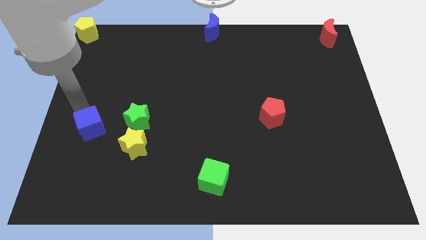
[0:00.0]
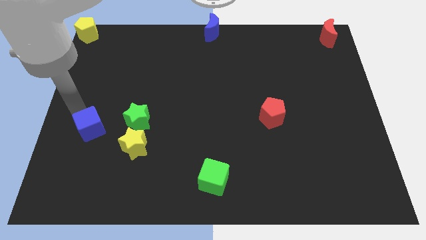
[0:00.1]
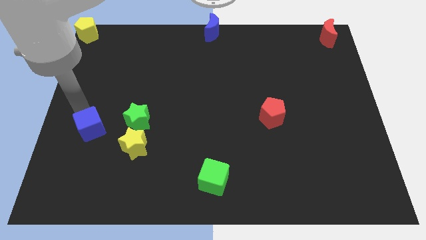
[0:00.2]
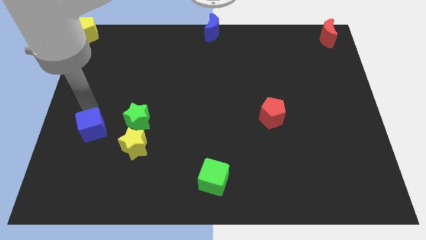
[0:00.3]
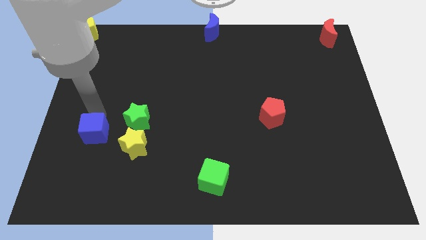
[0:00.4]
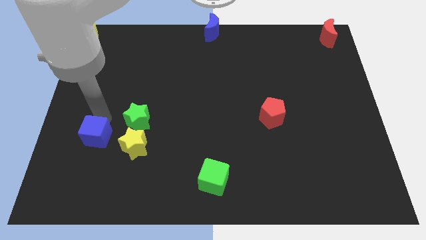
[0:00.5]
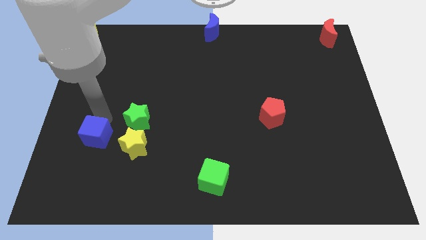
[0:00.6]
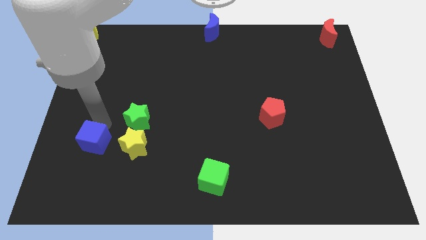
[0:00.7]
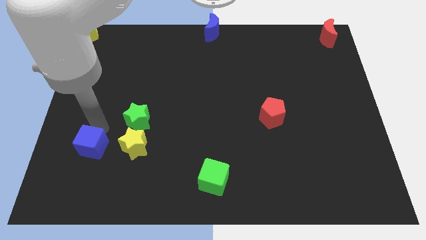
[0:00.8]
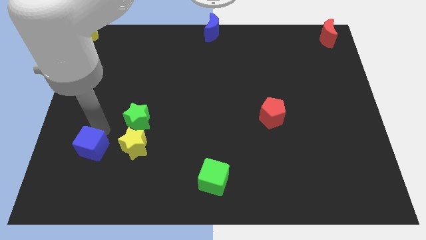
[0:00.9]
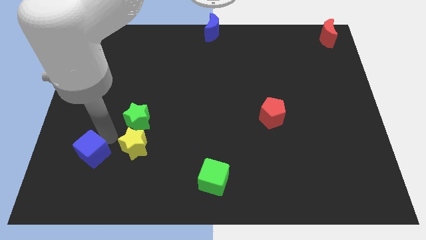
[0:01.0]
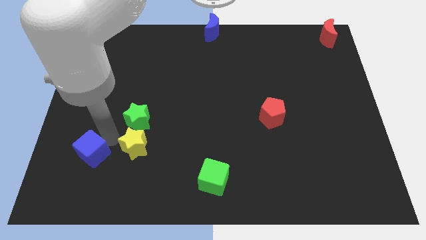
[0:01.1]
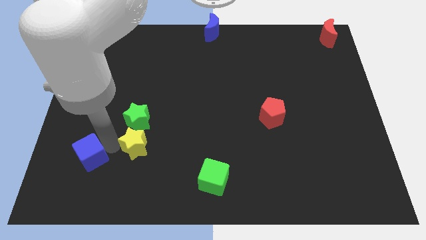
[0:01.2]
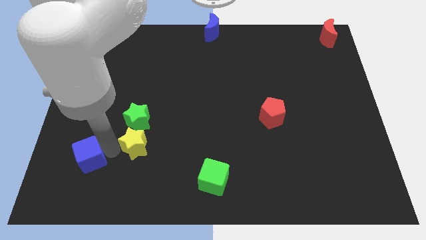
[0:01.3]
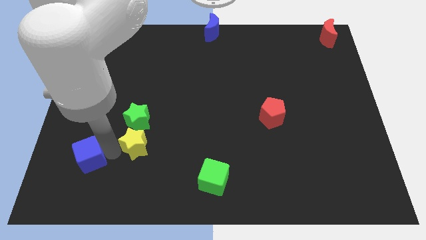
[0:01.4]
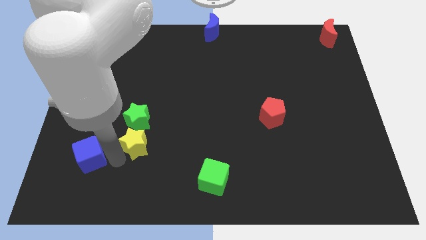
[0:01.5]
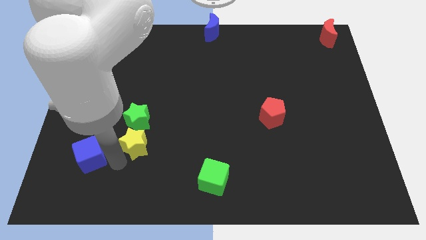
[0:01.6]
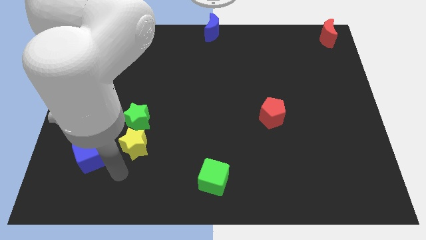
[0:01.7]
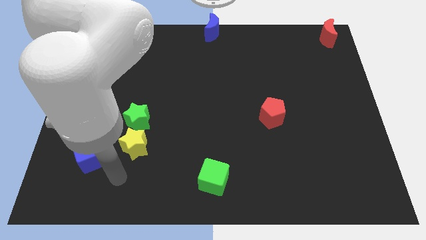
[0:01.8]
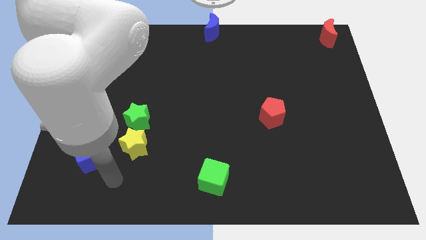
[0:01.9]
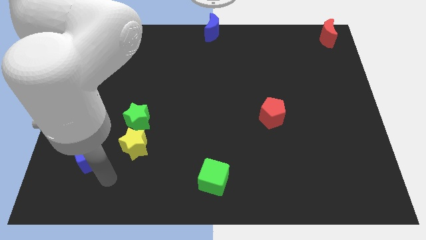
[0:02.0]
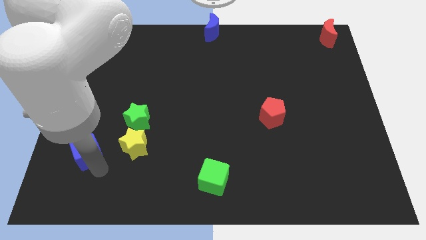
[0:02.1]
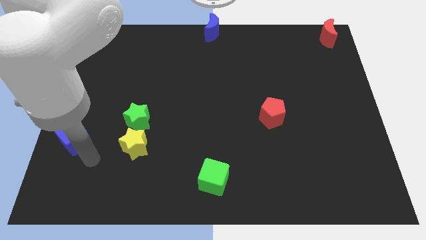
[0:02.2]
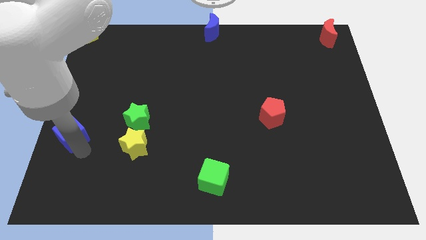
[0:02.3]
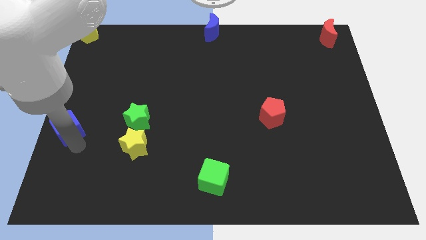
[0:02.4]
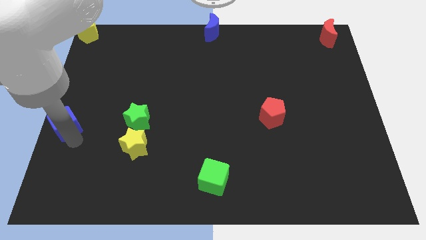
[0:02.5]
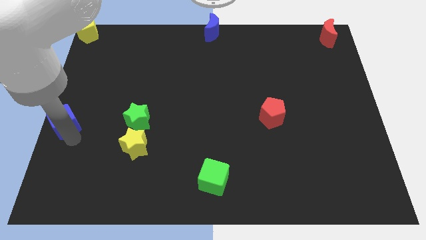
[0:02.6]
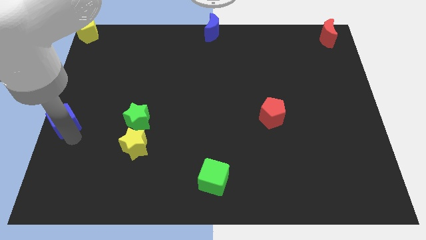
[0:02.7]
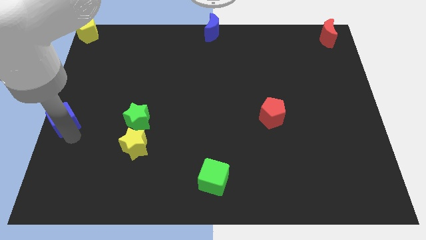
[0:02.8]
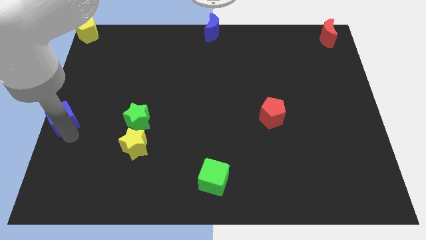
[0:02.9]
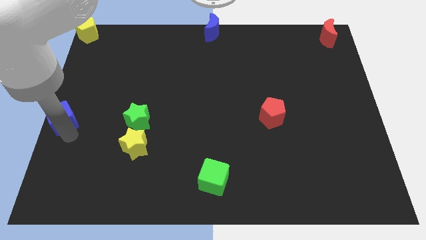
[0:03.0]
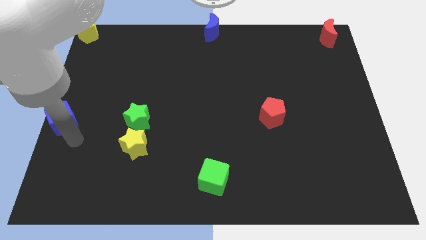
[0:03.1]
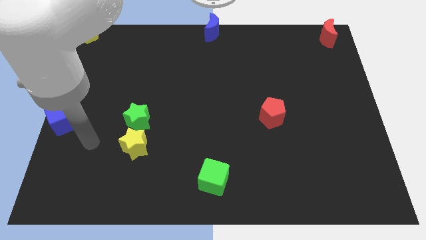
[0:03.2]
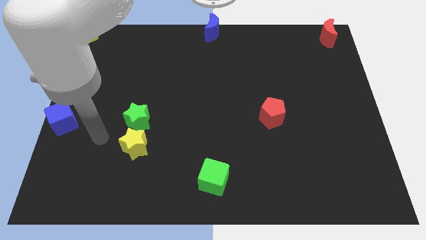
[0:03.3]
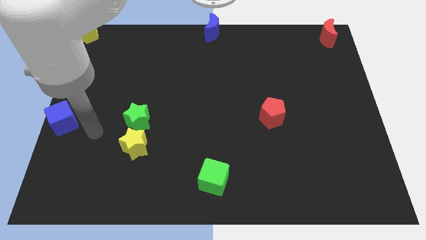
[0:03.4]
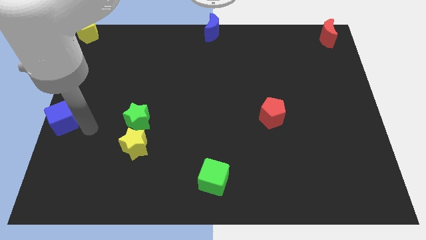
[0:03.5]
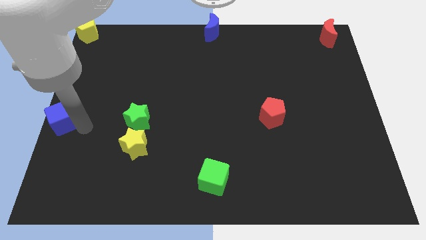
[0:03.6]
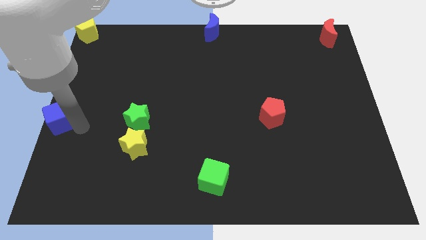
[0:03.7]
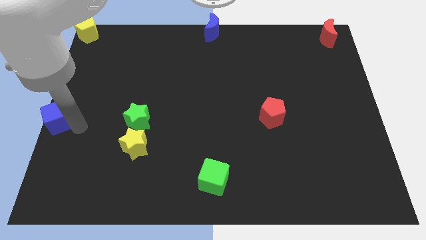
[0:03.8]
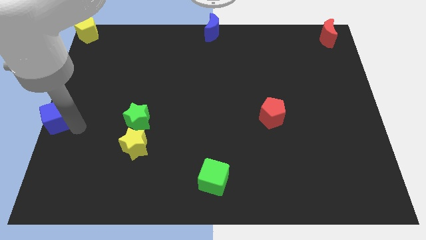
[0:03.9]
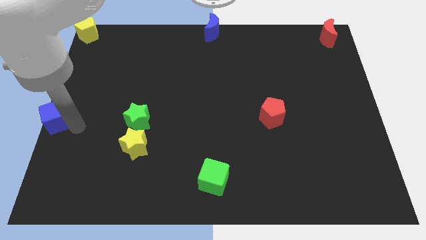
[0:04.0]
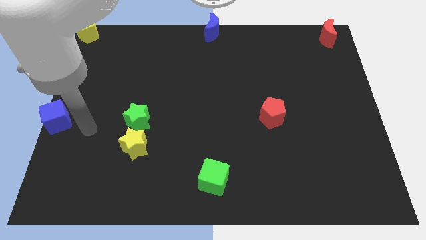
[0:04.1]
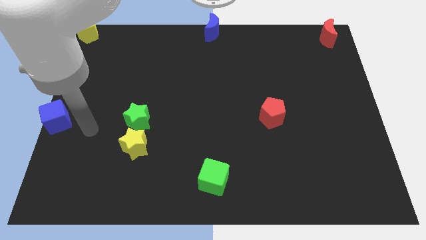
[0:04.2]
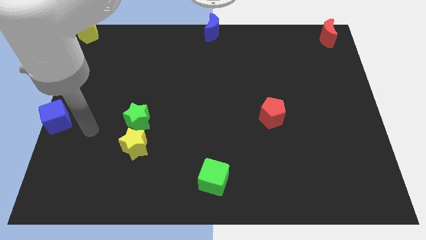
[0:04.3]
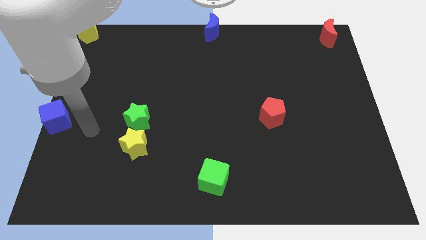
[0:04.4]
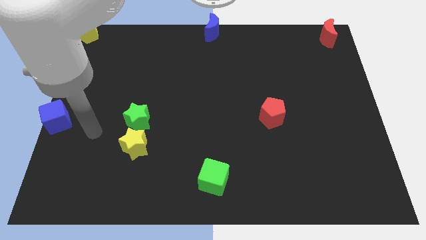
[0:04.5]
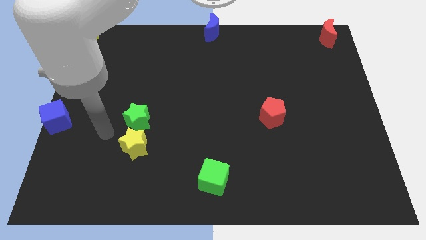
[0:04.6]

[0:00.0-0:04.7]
place the blue cube at the left center of the board

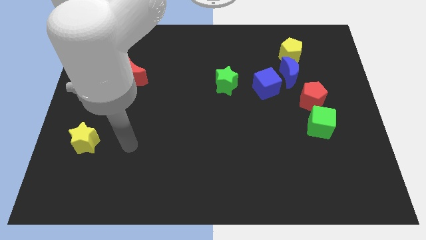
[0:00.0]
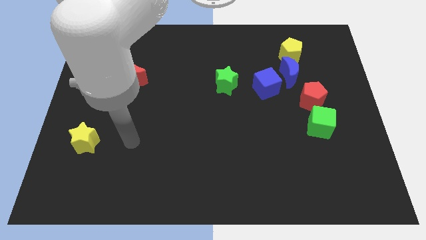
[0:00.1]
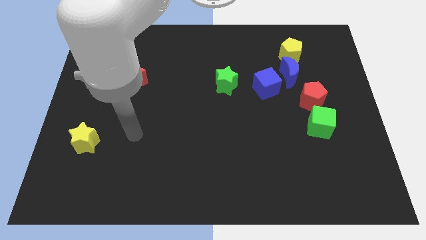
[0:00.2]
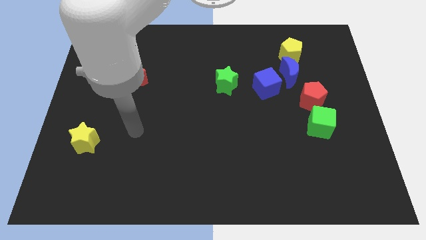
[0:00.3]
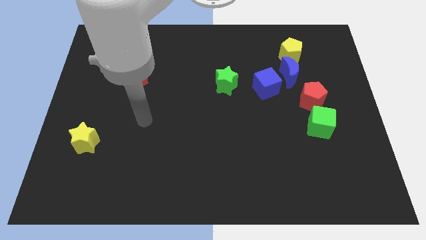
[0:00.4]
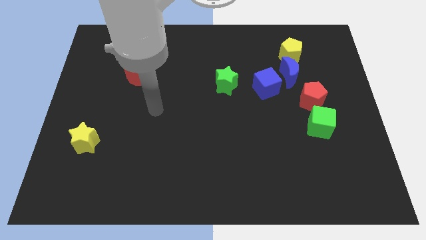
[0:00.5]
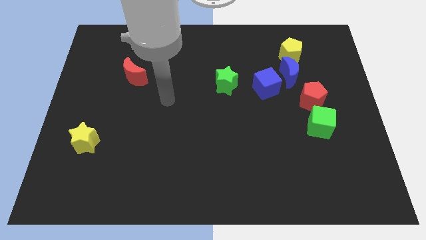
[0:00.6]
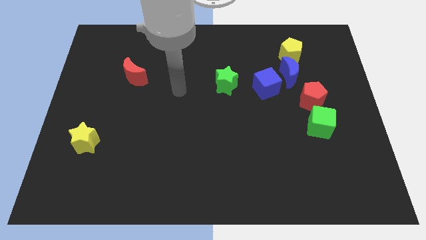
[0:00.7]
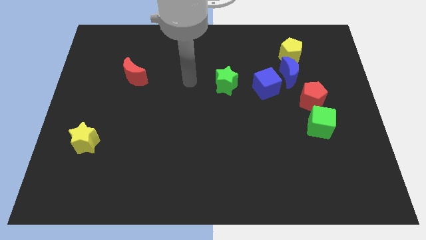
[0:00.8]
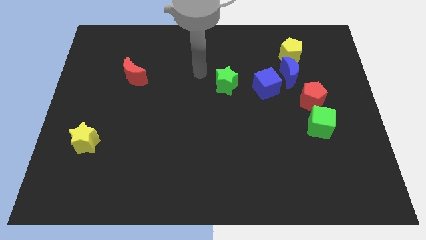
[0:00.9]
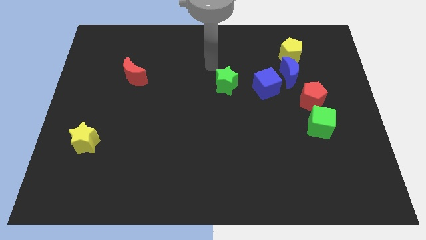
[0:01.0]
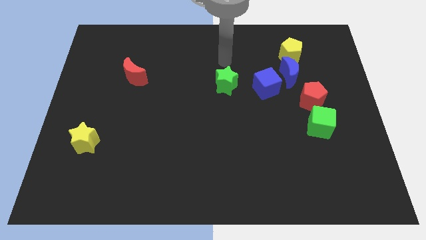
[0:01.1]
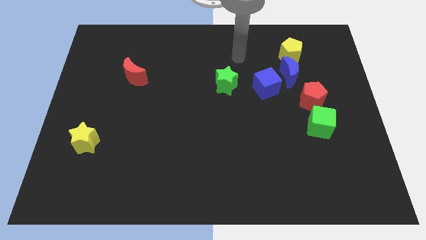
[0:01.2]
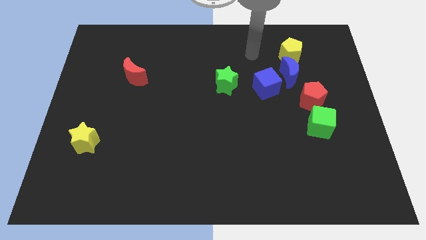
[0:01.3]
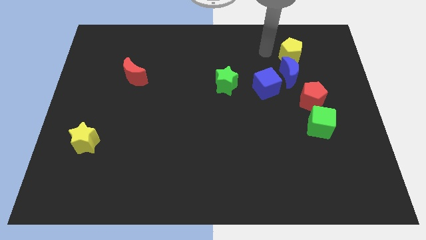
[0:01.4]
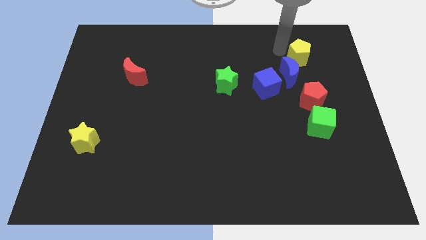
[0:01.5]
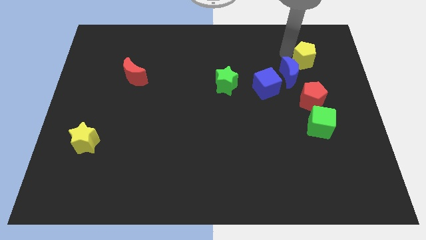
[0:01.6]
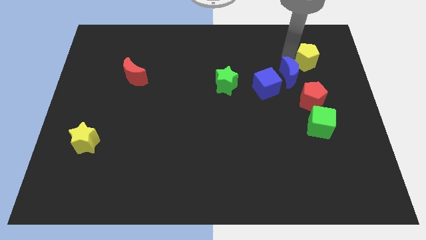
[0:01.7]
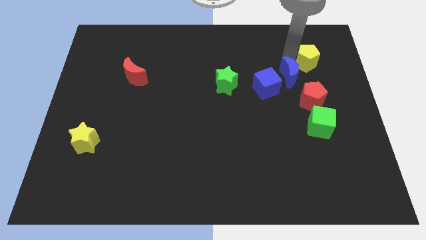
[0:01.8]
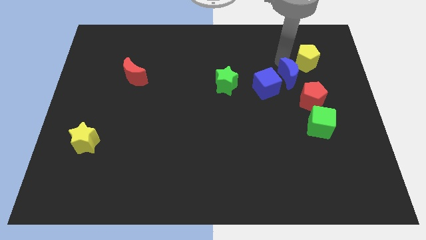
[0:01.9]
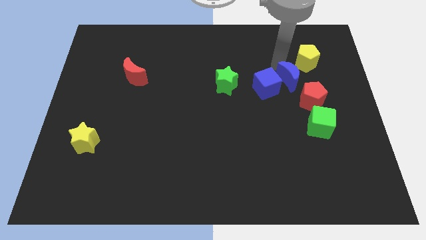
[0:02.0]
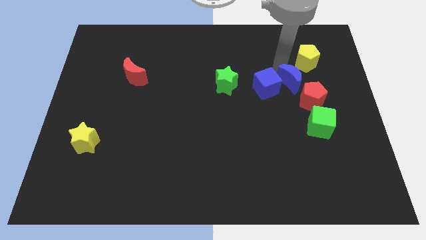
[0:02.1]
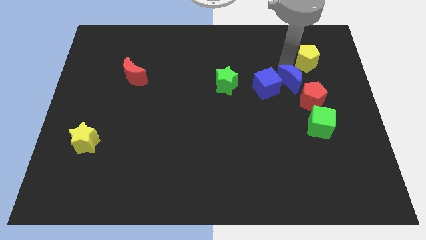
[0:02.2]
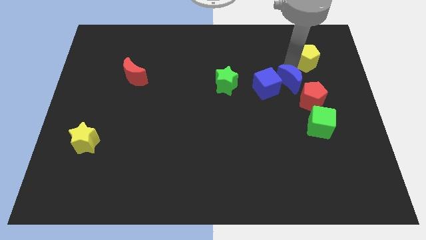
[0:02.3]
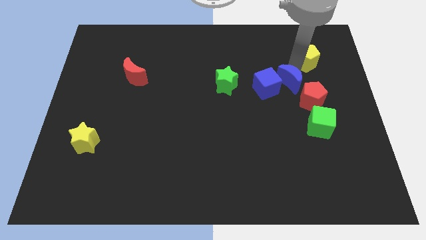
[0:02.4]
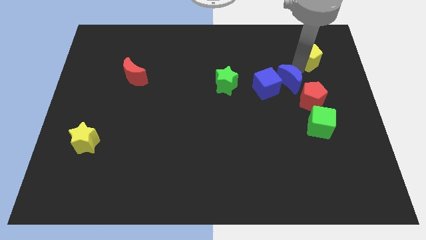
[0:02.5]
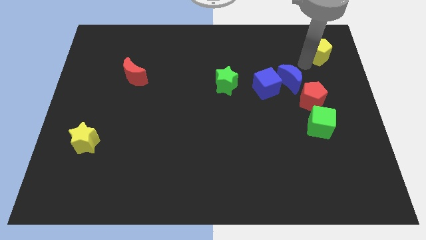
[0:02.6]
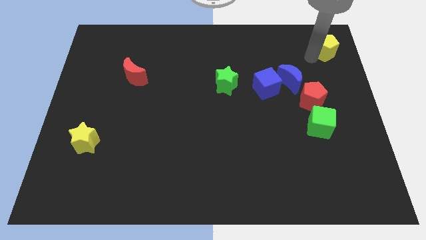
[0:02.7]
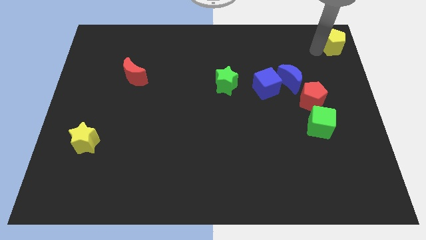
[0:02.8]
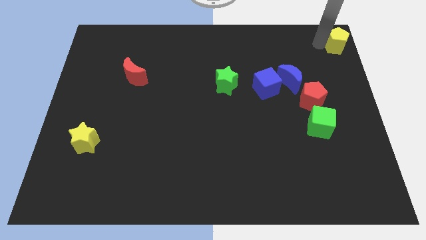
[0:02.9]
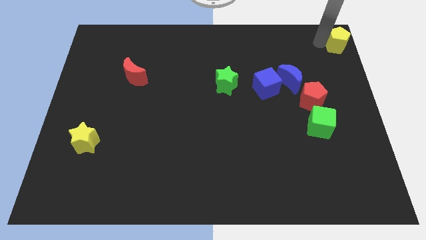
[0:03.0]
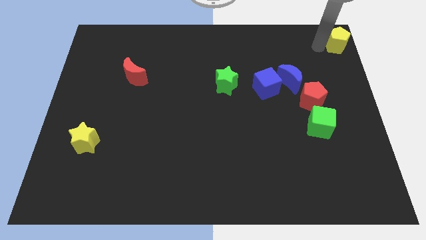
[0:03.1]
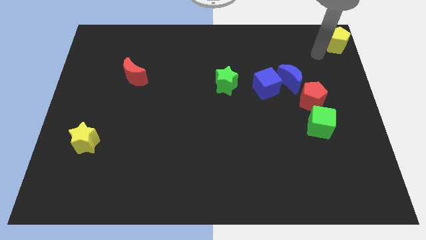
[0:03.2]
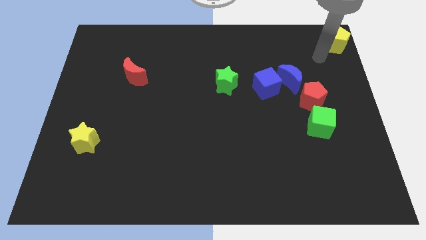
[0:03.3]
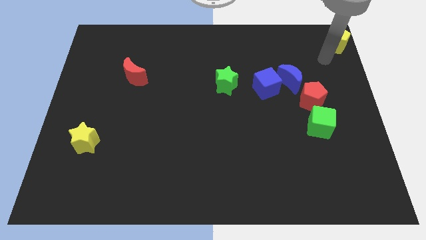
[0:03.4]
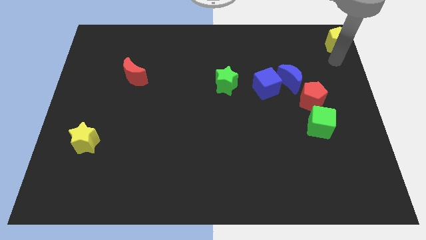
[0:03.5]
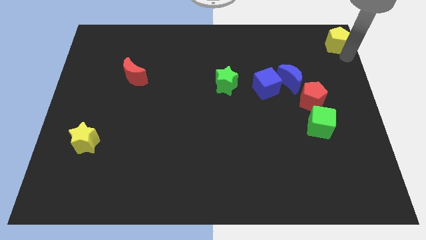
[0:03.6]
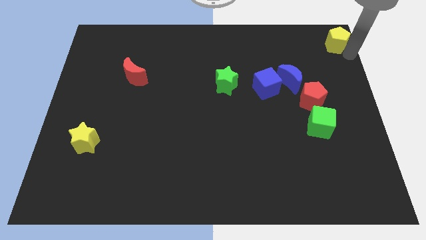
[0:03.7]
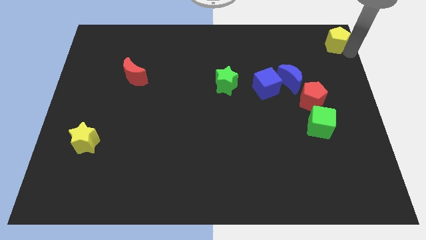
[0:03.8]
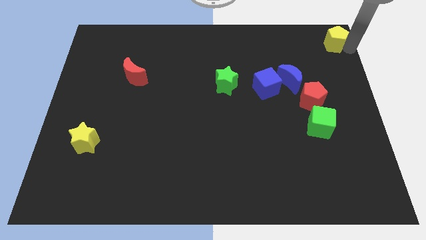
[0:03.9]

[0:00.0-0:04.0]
move the yellow pentagon to the top right

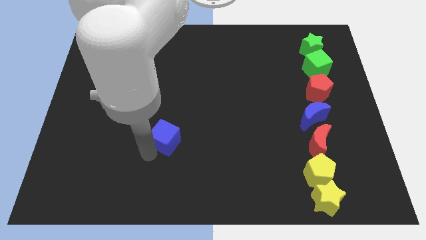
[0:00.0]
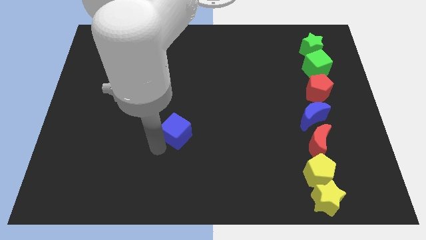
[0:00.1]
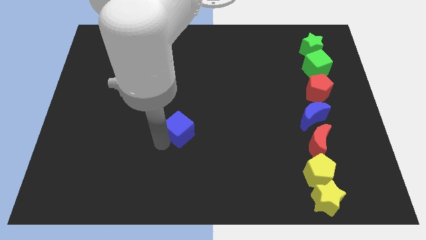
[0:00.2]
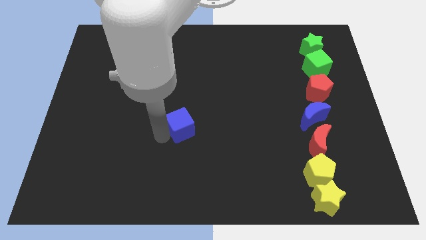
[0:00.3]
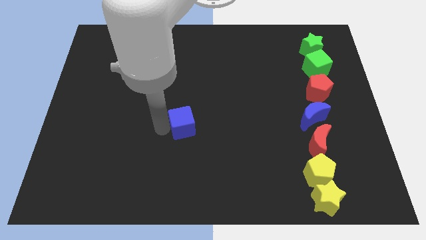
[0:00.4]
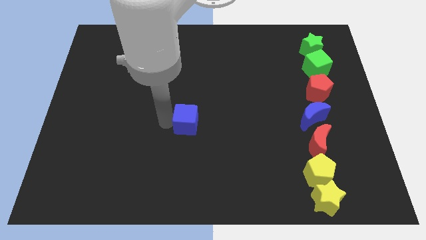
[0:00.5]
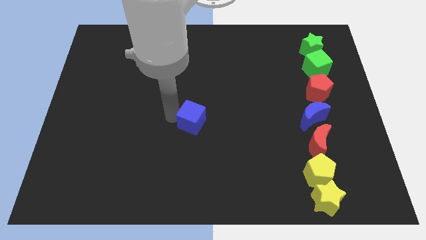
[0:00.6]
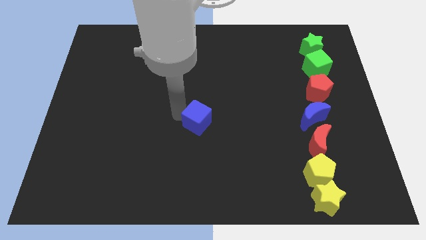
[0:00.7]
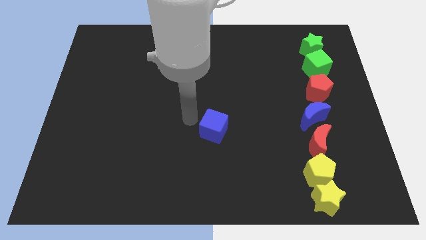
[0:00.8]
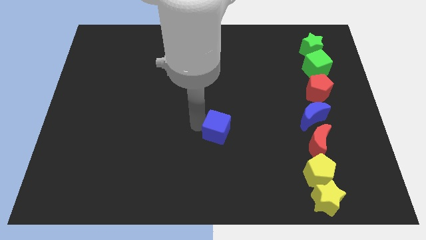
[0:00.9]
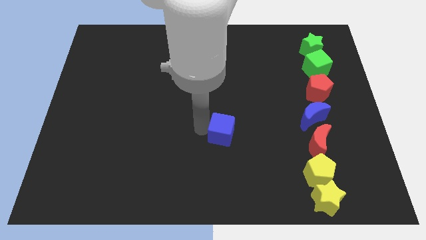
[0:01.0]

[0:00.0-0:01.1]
push the blue cube to the center of the board
